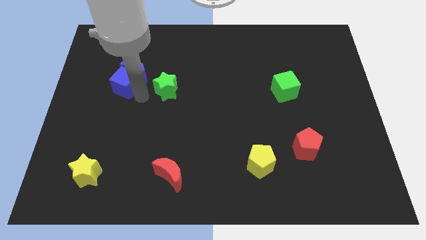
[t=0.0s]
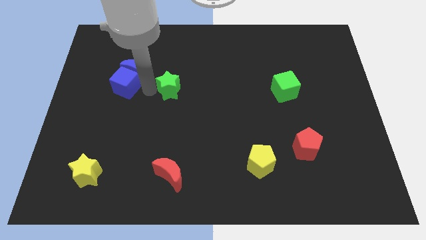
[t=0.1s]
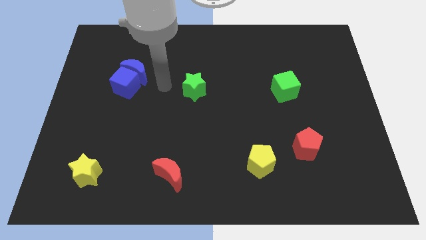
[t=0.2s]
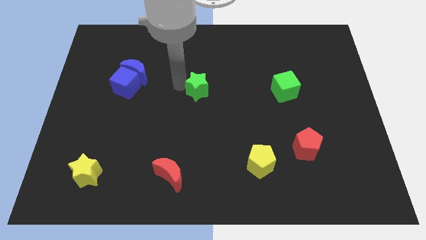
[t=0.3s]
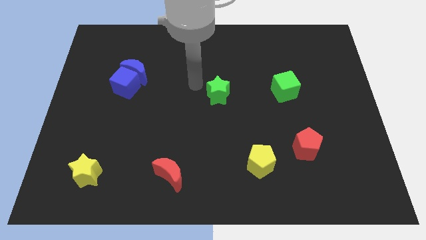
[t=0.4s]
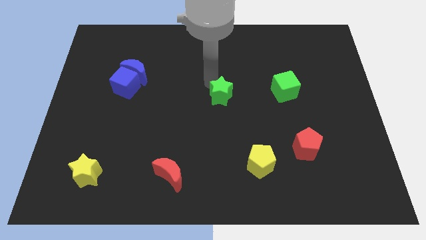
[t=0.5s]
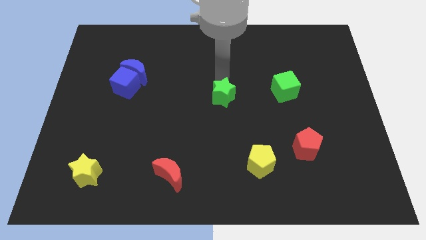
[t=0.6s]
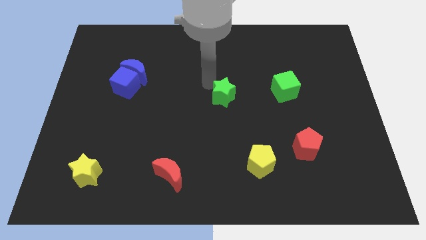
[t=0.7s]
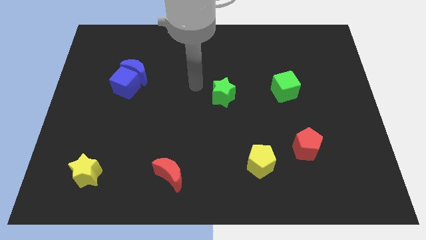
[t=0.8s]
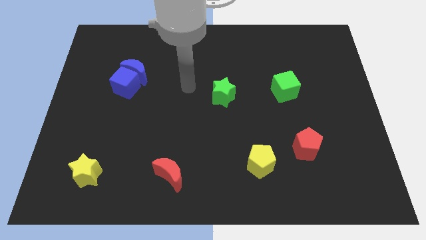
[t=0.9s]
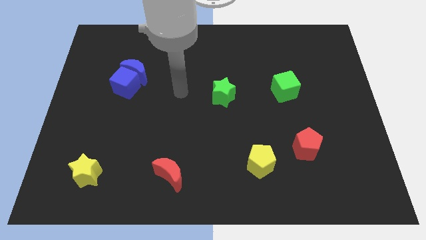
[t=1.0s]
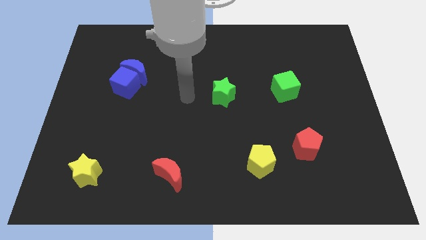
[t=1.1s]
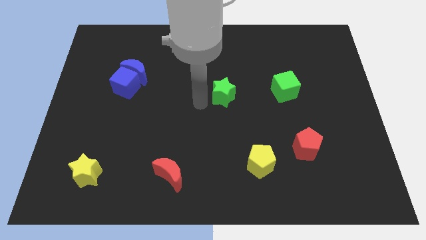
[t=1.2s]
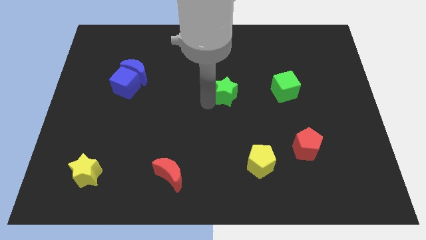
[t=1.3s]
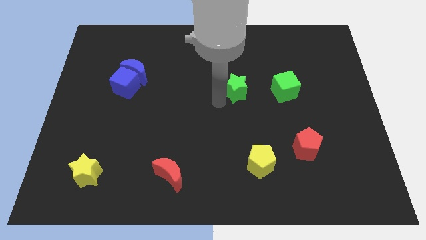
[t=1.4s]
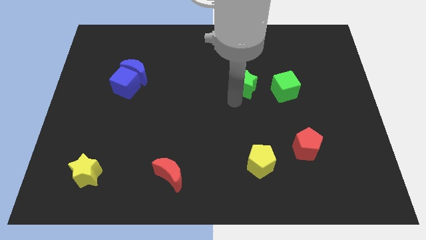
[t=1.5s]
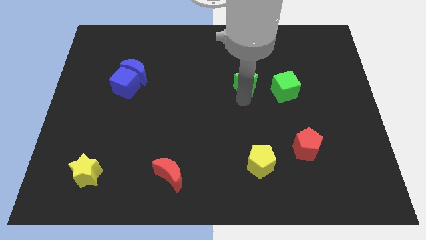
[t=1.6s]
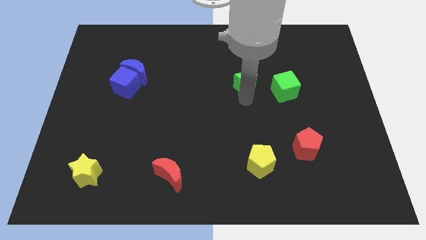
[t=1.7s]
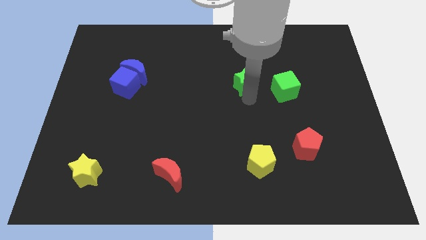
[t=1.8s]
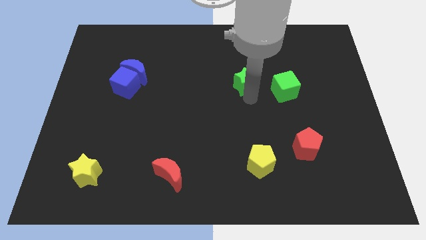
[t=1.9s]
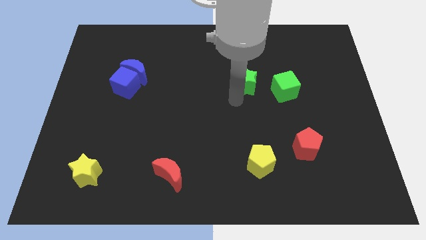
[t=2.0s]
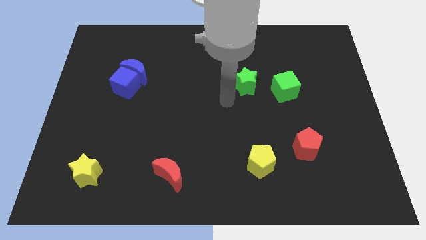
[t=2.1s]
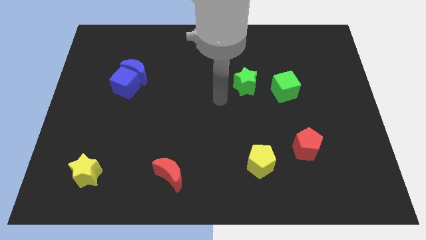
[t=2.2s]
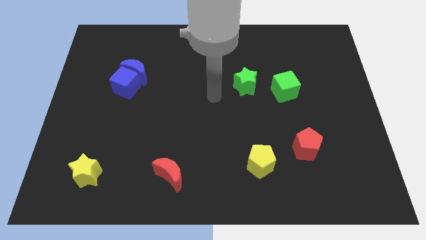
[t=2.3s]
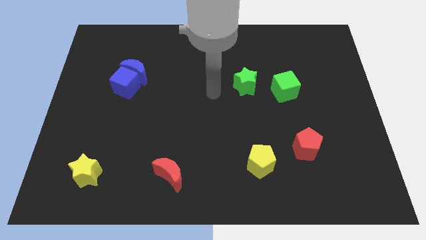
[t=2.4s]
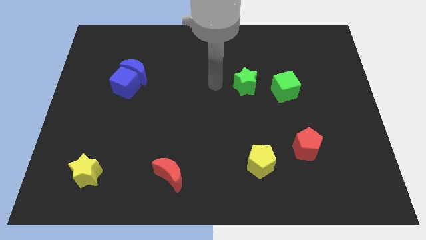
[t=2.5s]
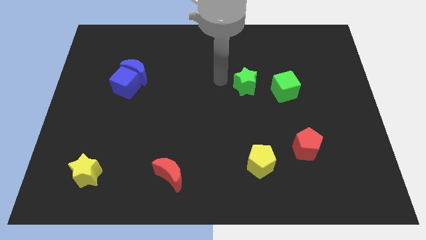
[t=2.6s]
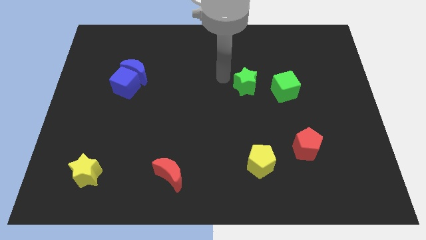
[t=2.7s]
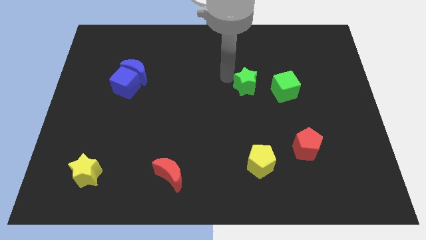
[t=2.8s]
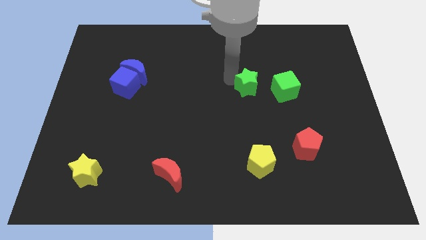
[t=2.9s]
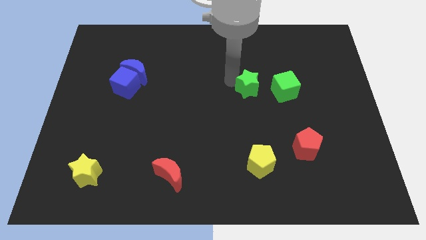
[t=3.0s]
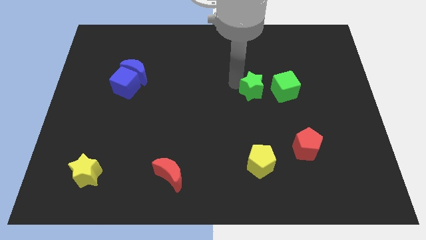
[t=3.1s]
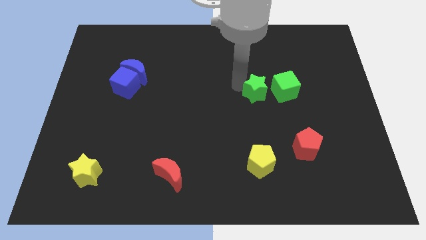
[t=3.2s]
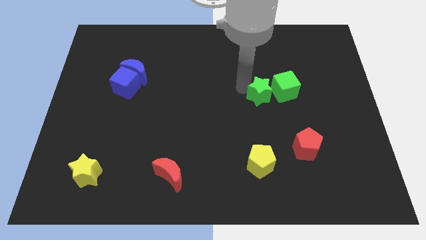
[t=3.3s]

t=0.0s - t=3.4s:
push green star above yellow pentagon

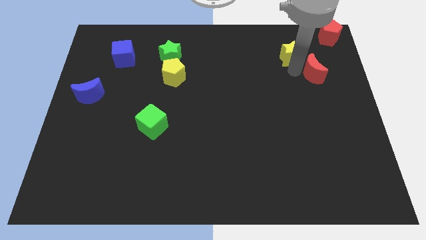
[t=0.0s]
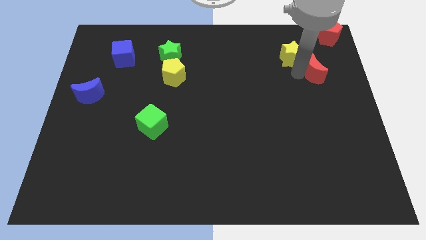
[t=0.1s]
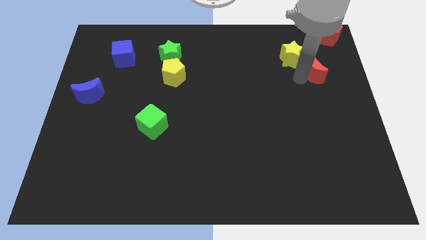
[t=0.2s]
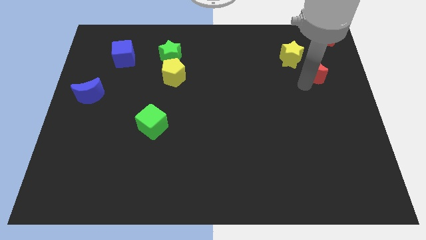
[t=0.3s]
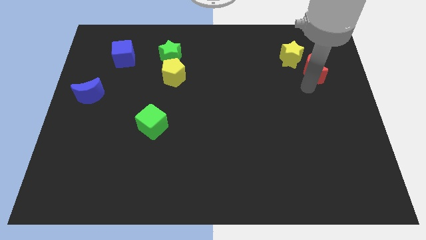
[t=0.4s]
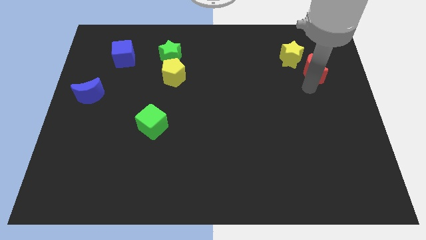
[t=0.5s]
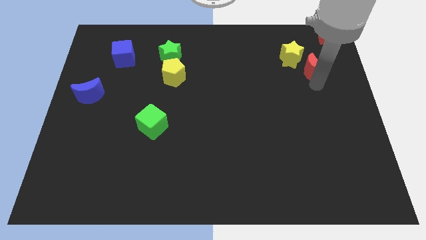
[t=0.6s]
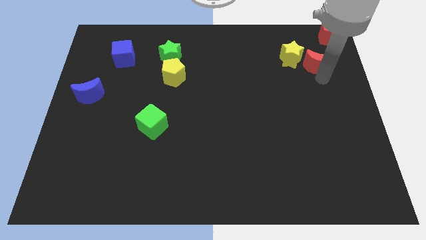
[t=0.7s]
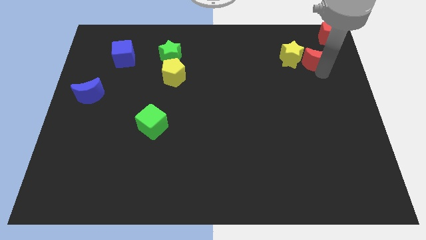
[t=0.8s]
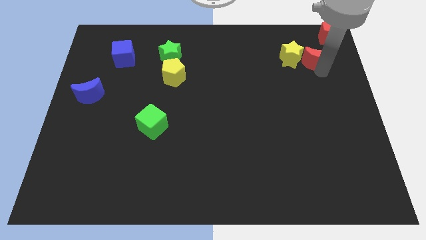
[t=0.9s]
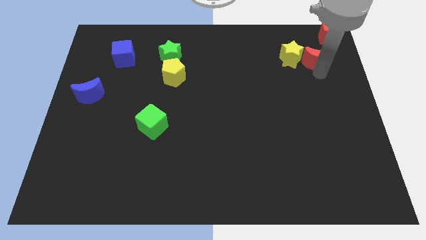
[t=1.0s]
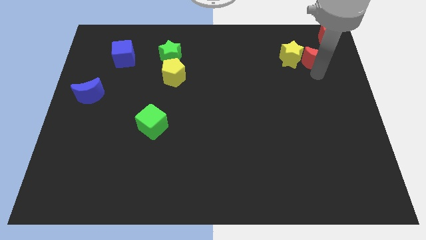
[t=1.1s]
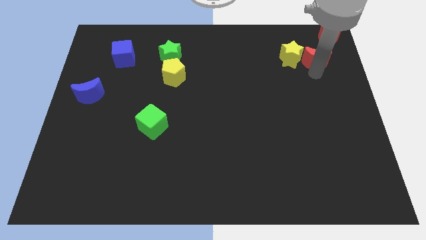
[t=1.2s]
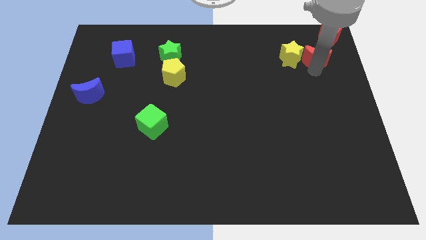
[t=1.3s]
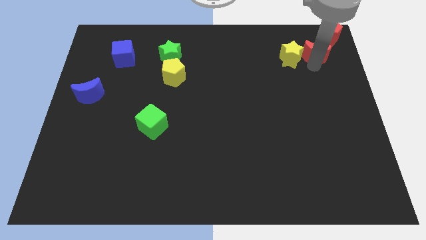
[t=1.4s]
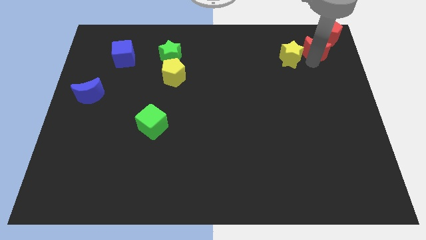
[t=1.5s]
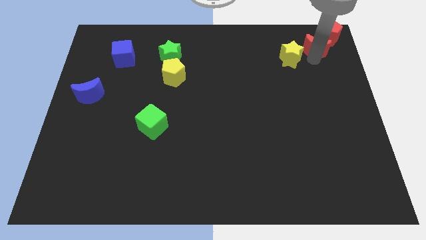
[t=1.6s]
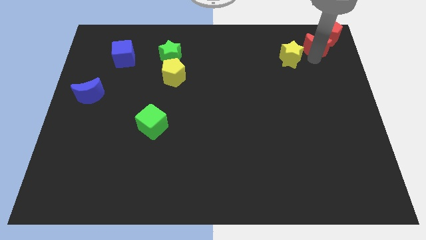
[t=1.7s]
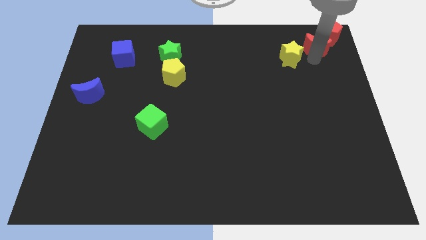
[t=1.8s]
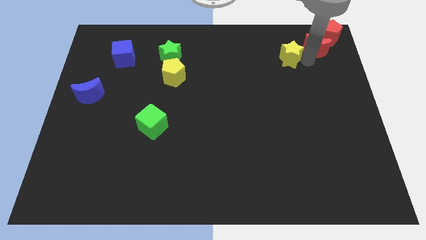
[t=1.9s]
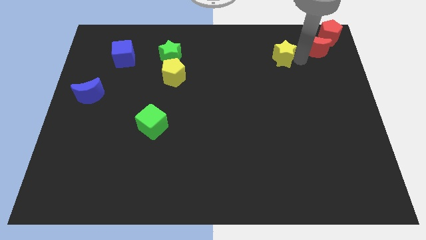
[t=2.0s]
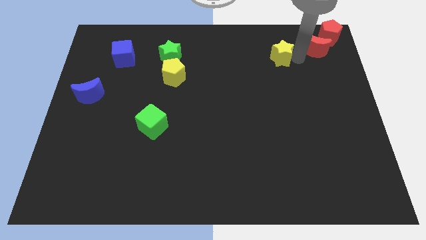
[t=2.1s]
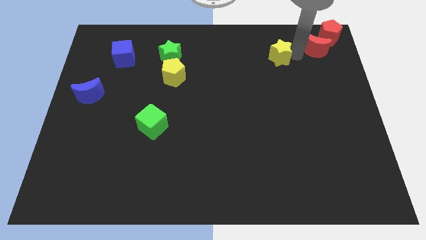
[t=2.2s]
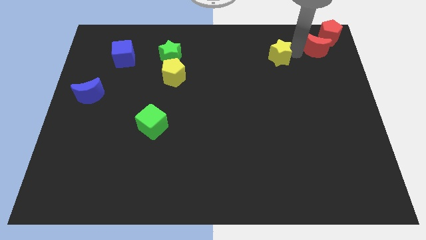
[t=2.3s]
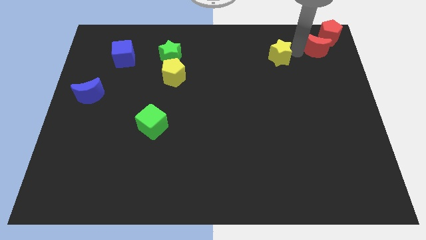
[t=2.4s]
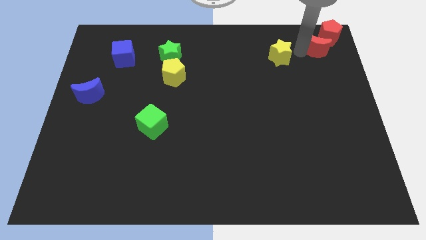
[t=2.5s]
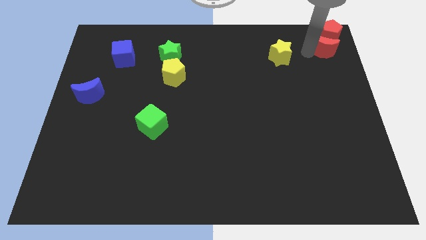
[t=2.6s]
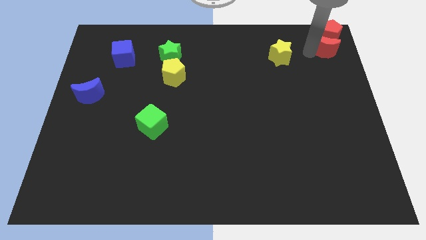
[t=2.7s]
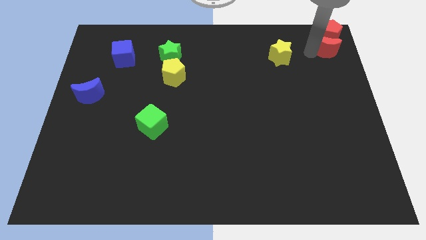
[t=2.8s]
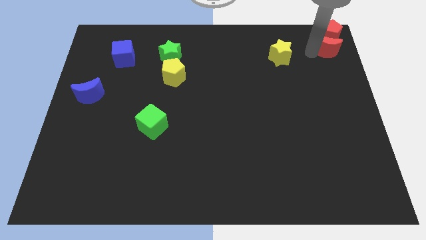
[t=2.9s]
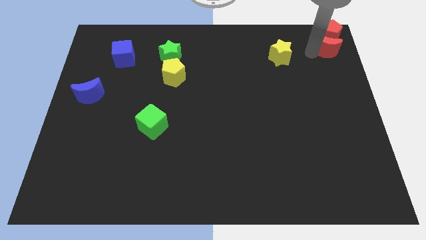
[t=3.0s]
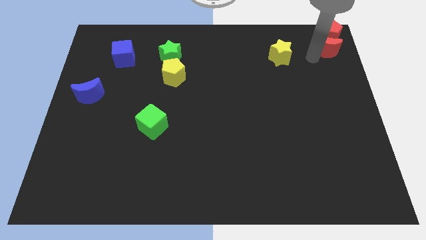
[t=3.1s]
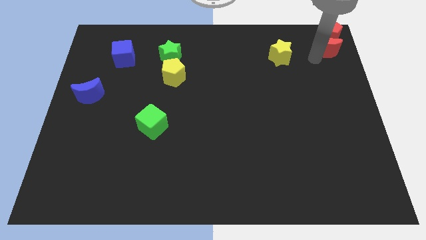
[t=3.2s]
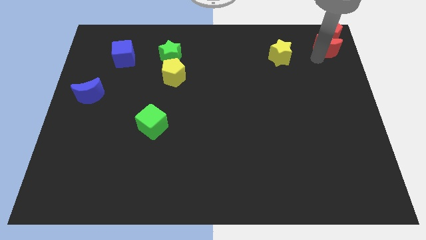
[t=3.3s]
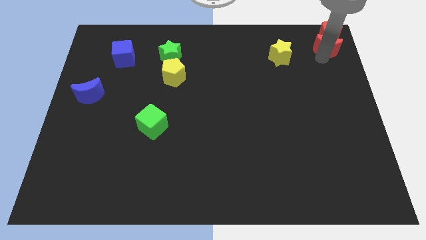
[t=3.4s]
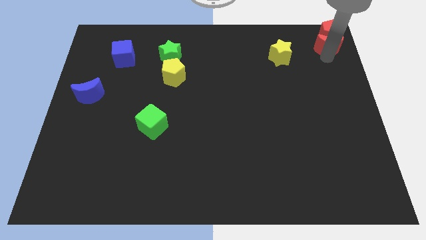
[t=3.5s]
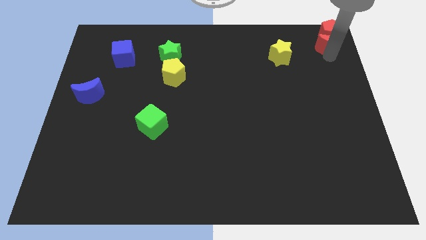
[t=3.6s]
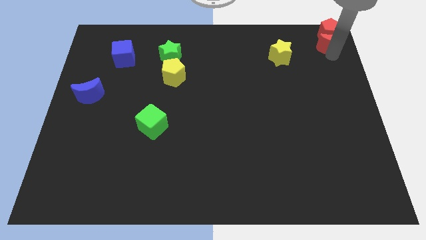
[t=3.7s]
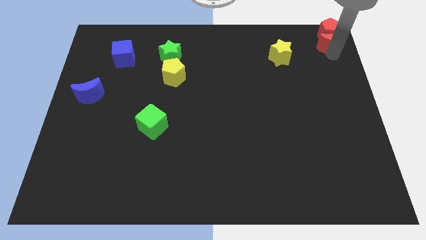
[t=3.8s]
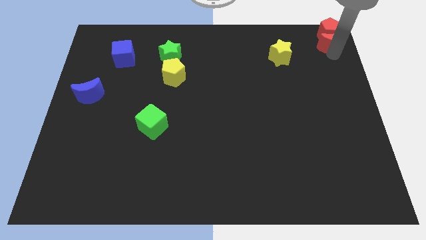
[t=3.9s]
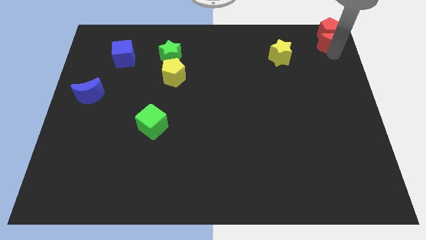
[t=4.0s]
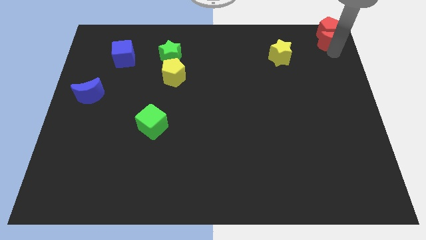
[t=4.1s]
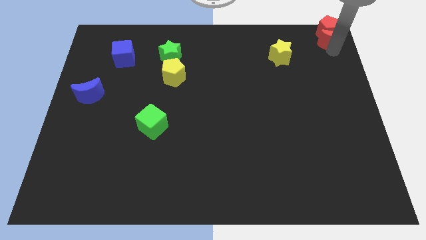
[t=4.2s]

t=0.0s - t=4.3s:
move the red moon into the red pentagon

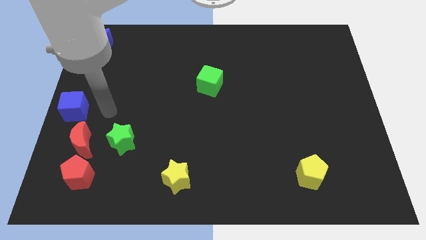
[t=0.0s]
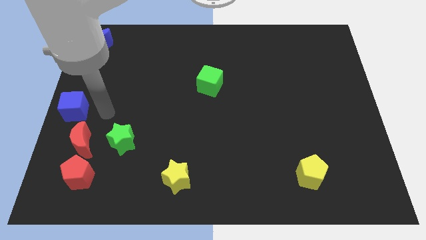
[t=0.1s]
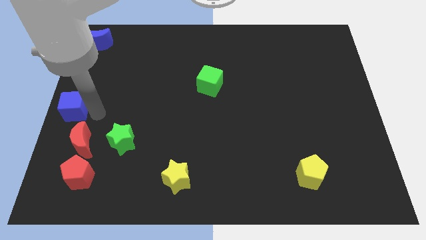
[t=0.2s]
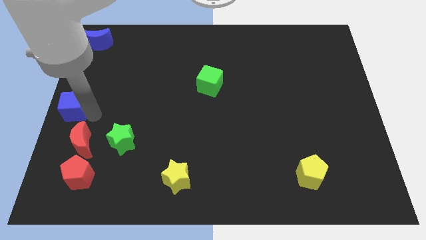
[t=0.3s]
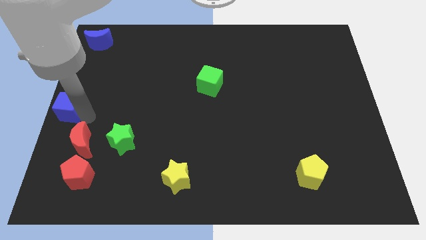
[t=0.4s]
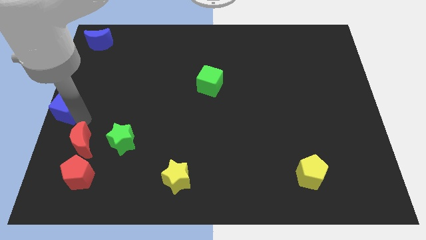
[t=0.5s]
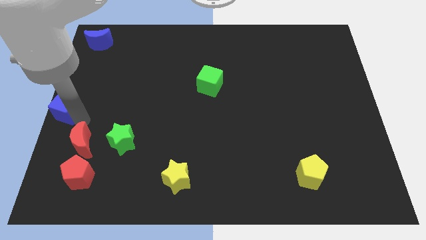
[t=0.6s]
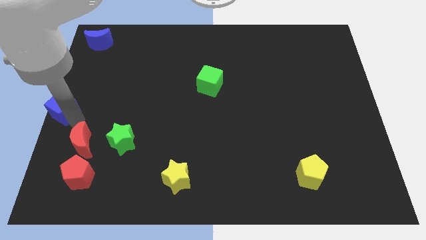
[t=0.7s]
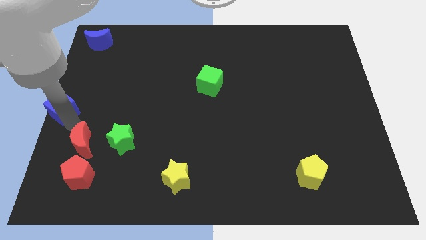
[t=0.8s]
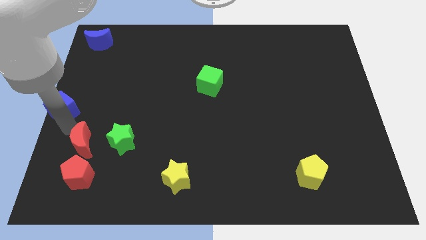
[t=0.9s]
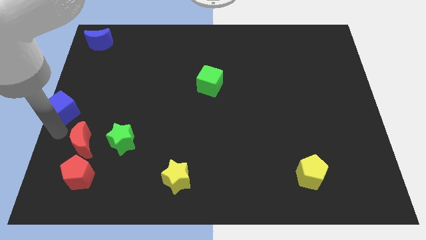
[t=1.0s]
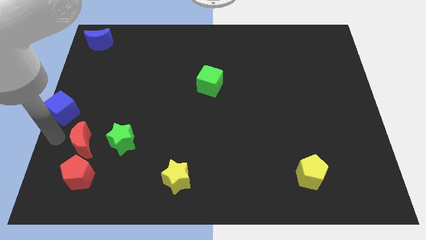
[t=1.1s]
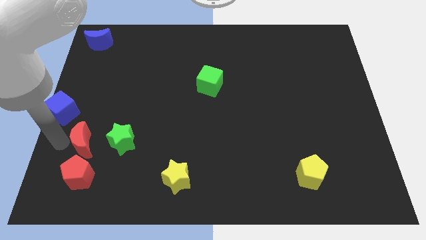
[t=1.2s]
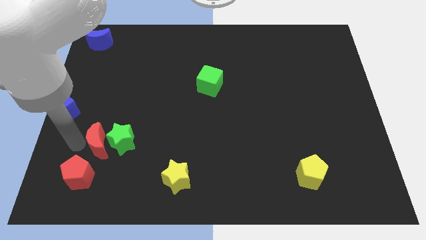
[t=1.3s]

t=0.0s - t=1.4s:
move blue cube to the left center of the board
